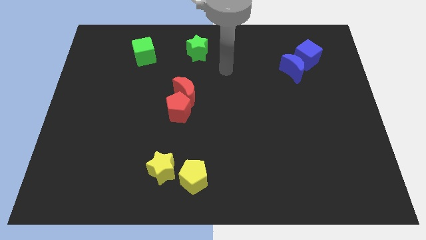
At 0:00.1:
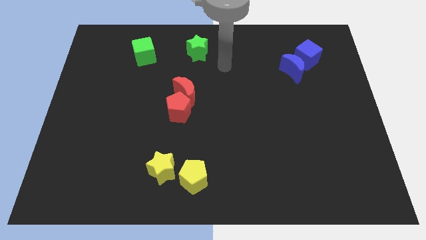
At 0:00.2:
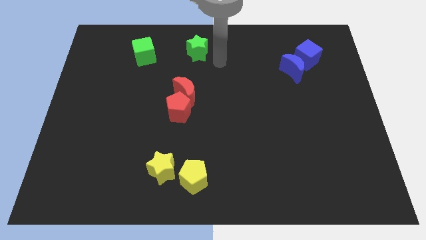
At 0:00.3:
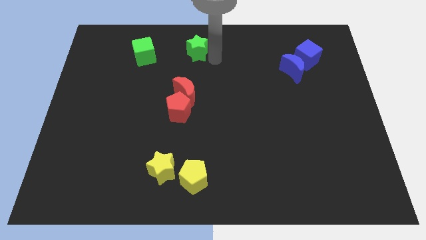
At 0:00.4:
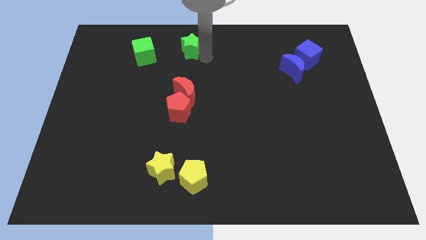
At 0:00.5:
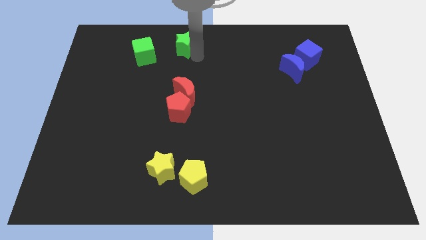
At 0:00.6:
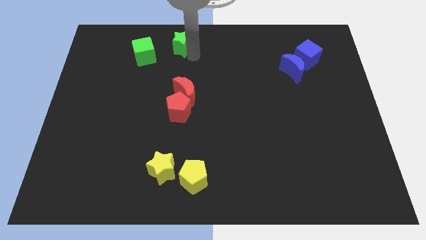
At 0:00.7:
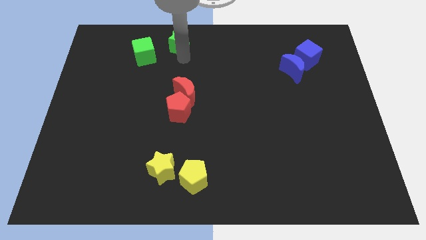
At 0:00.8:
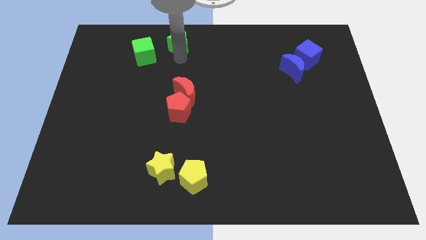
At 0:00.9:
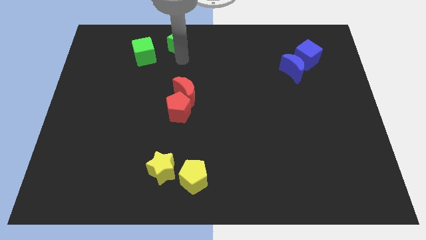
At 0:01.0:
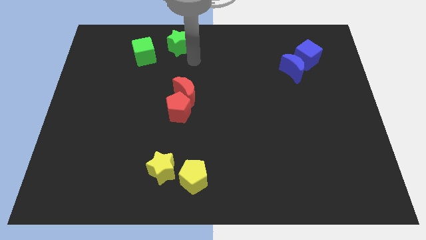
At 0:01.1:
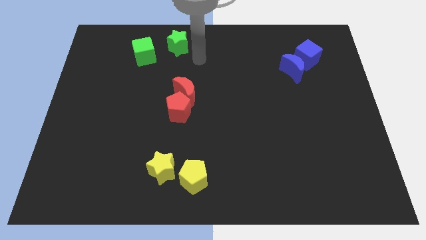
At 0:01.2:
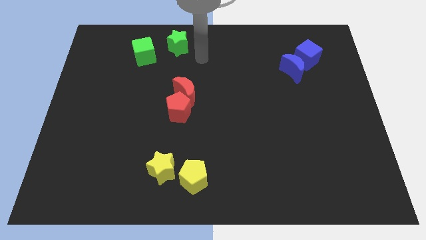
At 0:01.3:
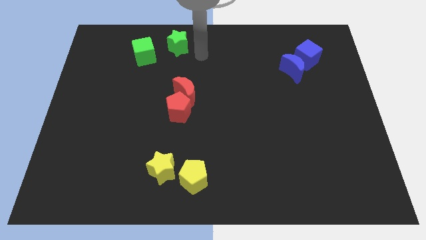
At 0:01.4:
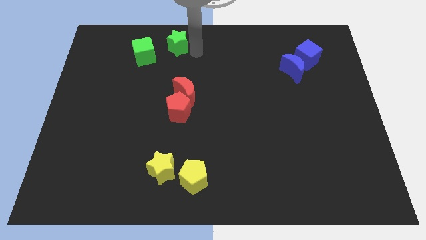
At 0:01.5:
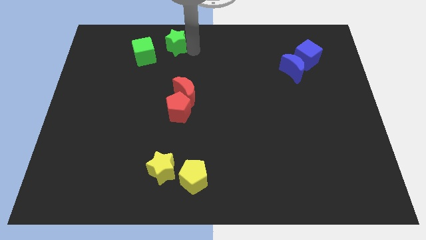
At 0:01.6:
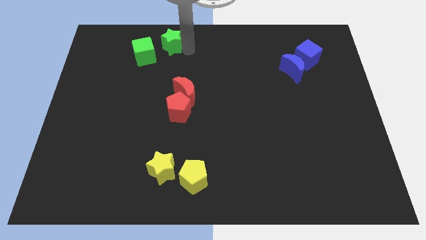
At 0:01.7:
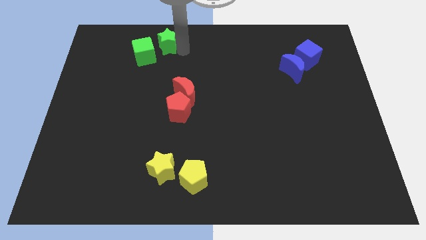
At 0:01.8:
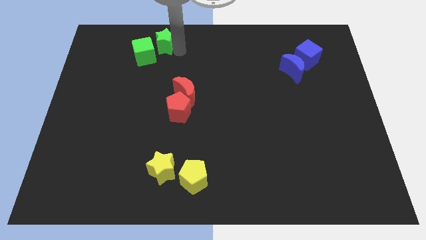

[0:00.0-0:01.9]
move the green star close to the green cube

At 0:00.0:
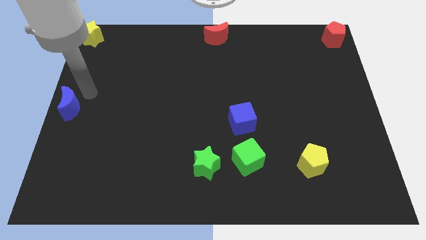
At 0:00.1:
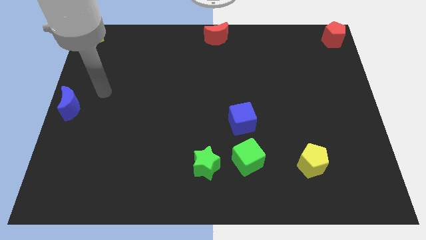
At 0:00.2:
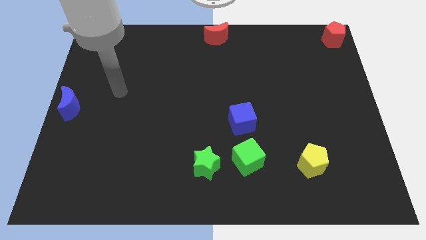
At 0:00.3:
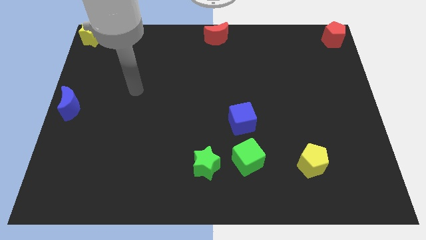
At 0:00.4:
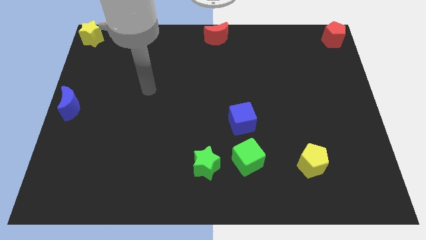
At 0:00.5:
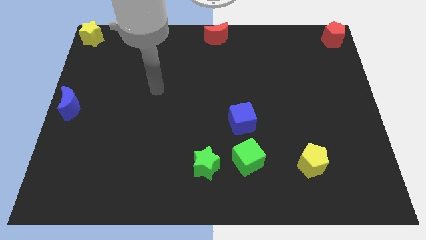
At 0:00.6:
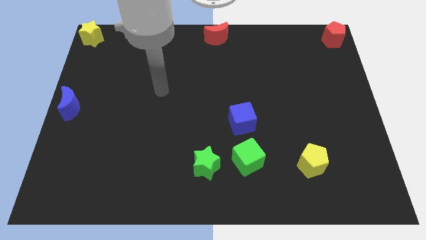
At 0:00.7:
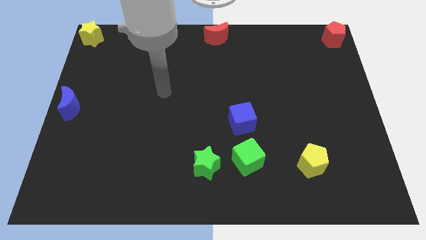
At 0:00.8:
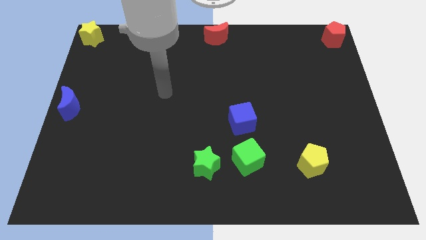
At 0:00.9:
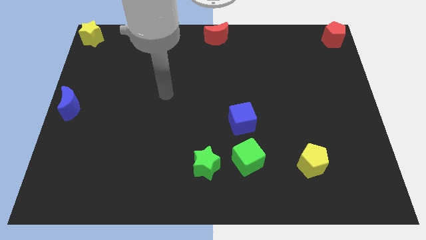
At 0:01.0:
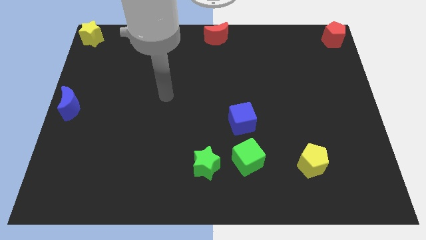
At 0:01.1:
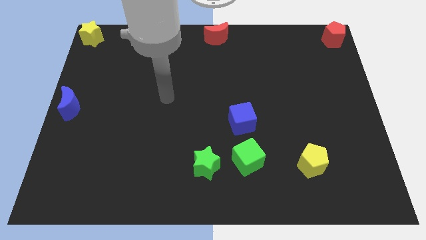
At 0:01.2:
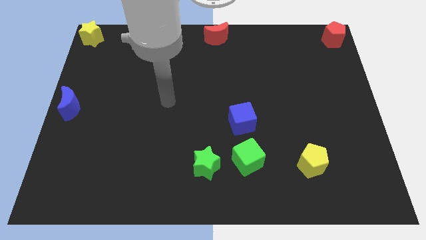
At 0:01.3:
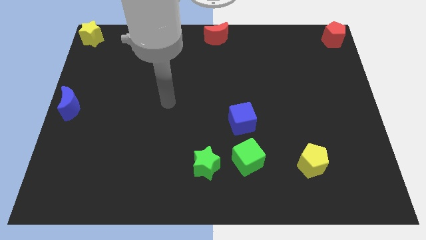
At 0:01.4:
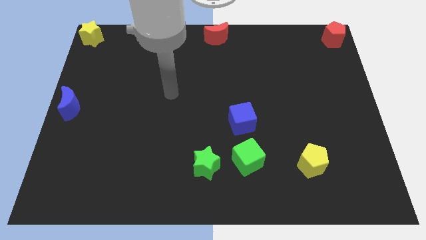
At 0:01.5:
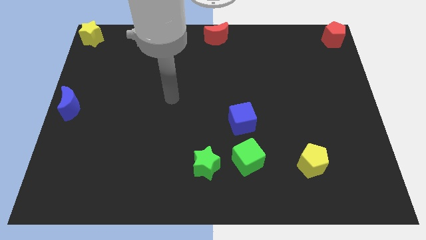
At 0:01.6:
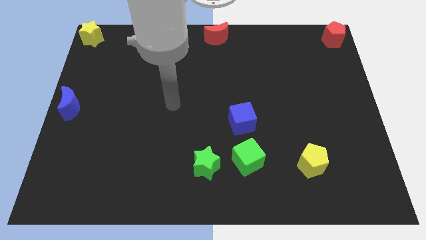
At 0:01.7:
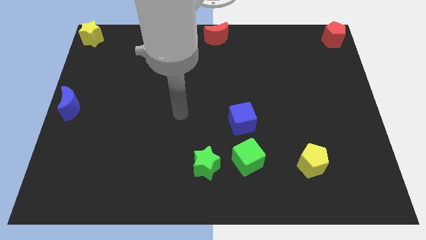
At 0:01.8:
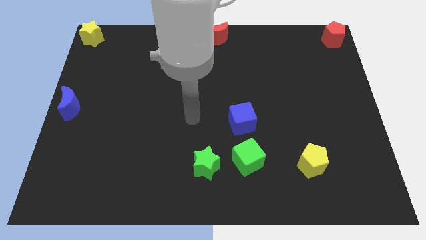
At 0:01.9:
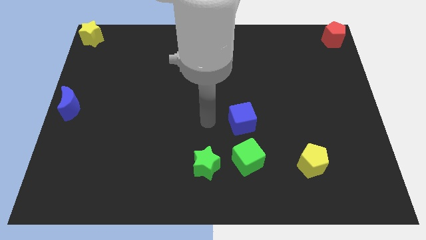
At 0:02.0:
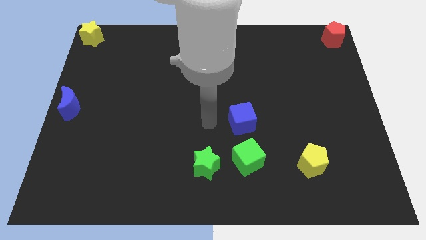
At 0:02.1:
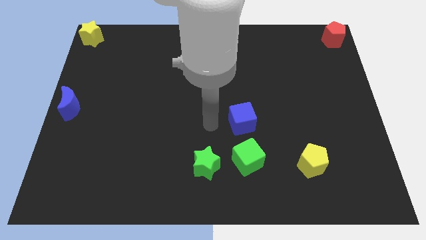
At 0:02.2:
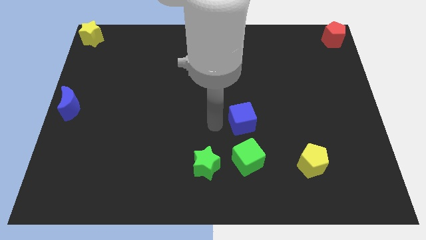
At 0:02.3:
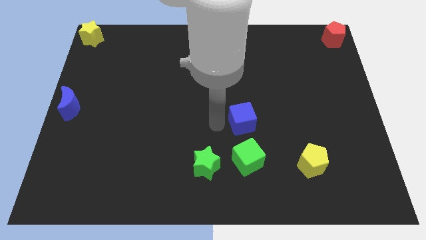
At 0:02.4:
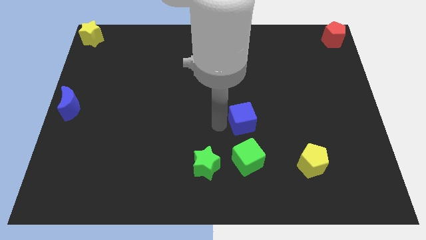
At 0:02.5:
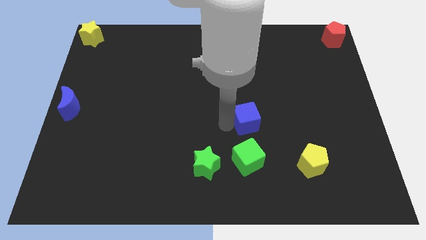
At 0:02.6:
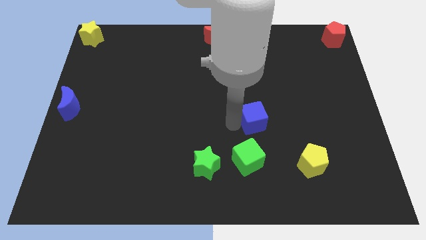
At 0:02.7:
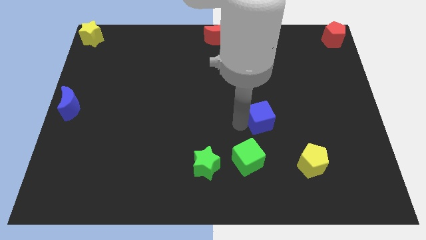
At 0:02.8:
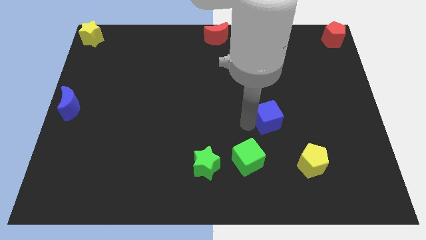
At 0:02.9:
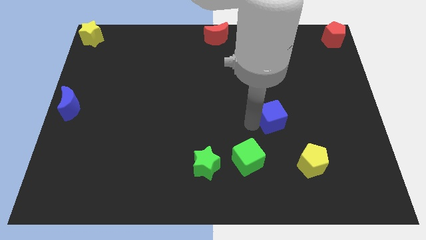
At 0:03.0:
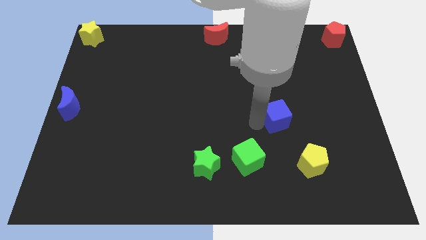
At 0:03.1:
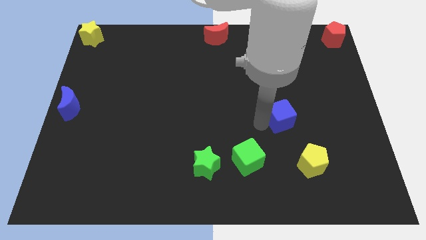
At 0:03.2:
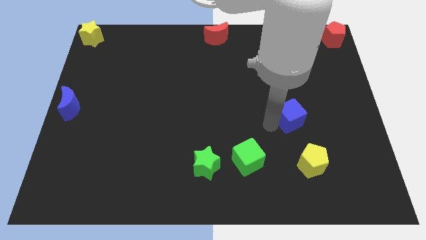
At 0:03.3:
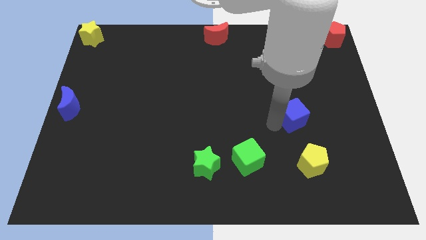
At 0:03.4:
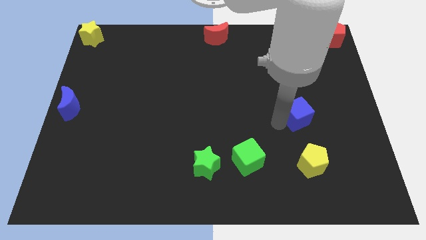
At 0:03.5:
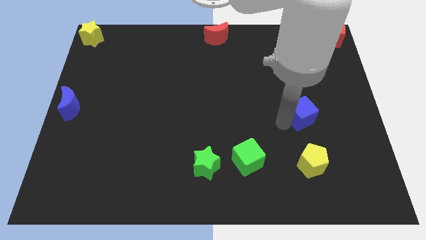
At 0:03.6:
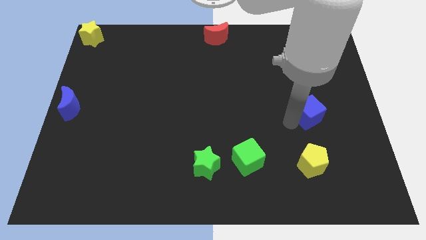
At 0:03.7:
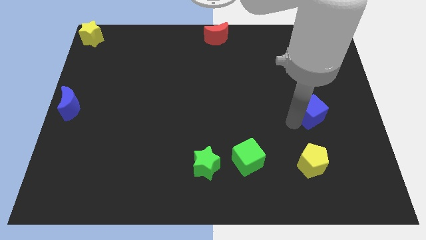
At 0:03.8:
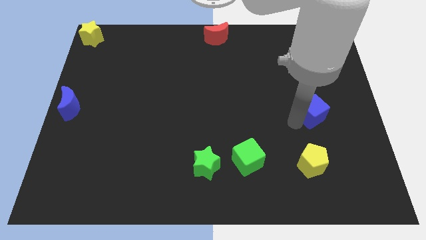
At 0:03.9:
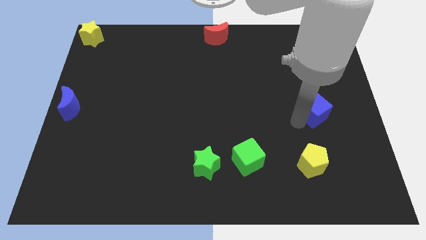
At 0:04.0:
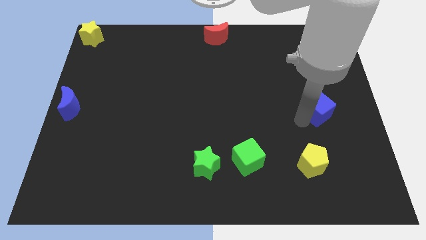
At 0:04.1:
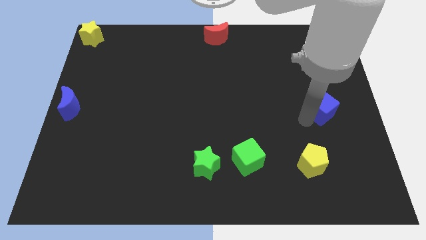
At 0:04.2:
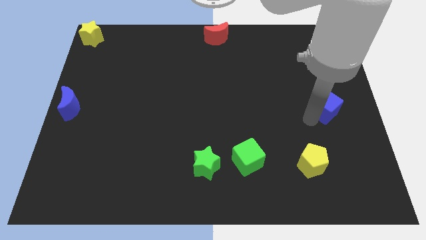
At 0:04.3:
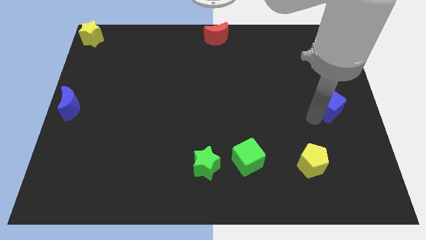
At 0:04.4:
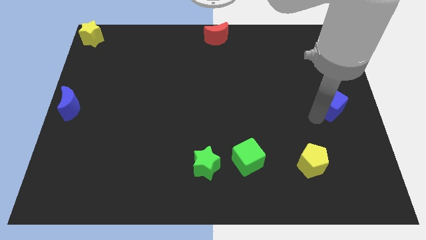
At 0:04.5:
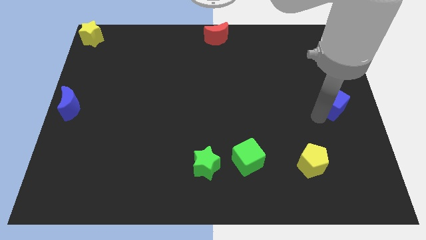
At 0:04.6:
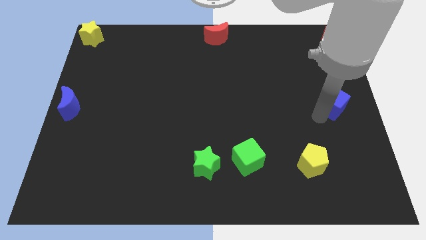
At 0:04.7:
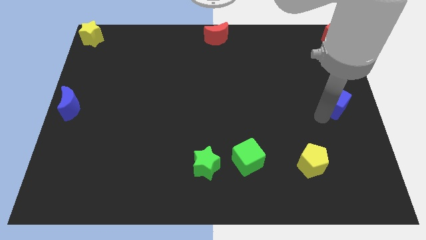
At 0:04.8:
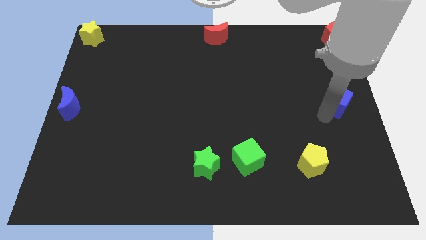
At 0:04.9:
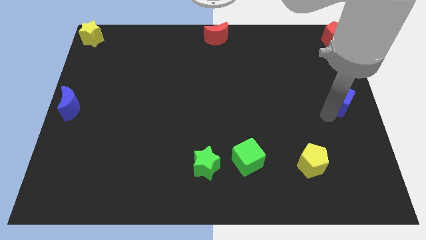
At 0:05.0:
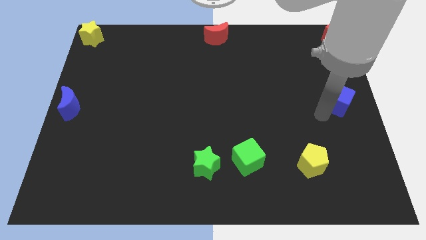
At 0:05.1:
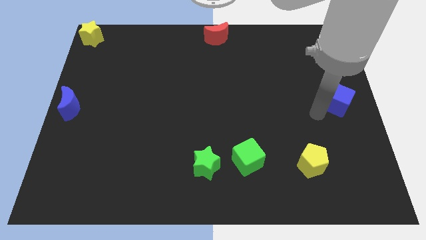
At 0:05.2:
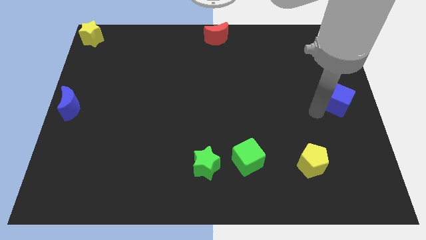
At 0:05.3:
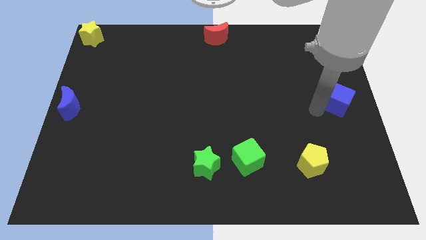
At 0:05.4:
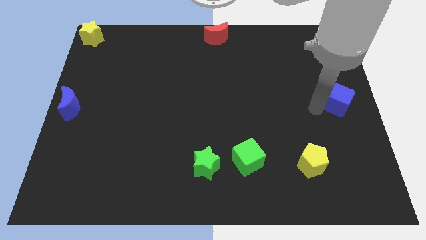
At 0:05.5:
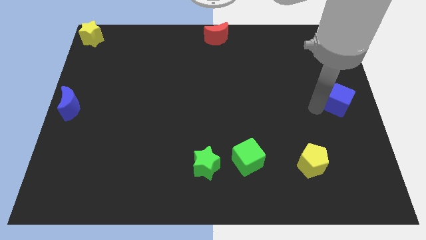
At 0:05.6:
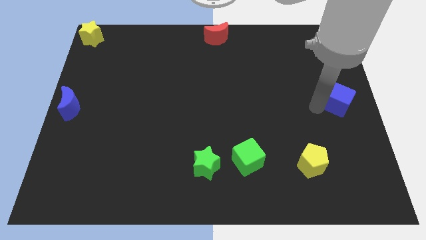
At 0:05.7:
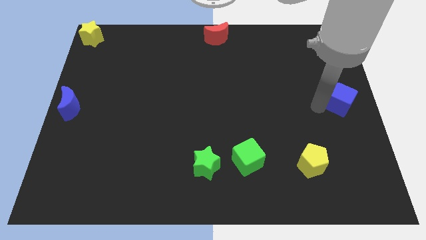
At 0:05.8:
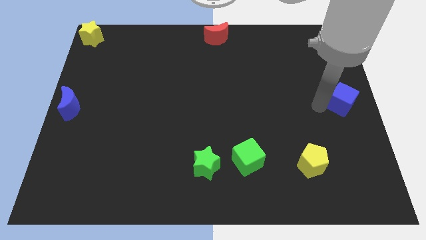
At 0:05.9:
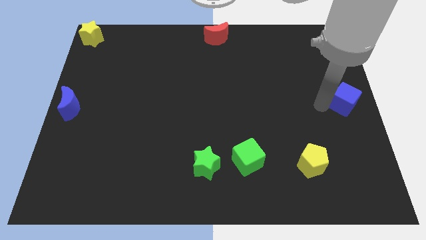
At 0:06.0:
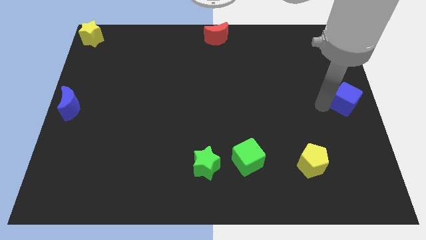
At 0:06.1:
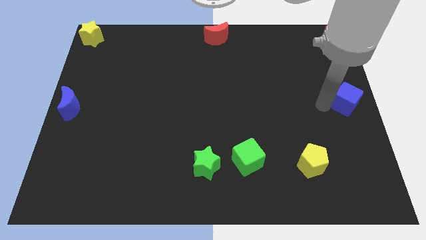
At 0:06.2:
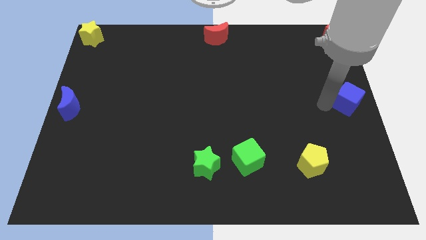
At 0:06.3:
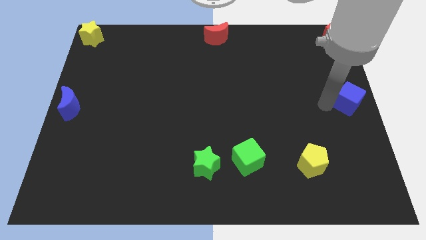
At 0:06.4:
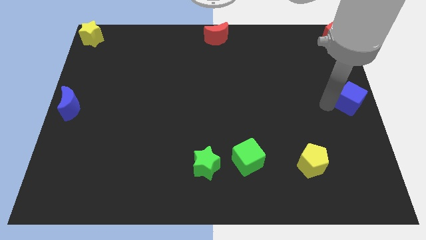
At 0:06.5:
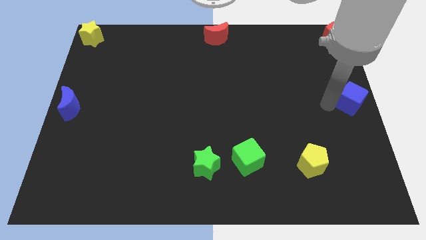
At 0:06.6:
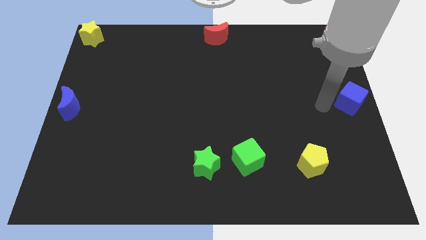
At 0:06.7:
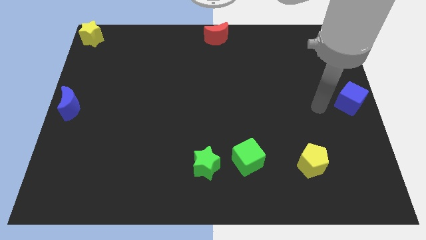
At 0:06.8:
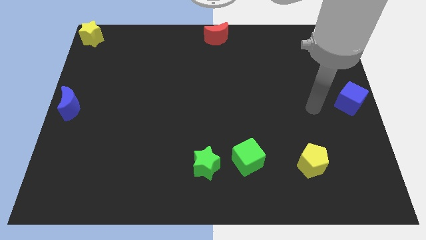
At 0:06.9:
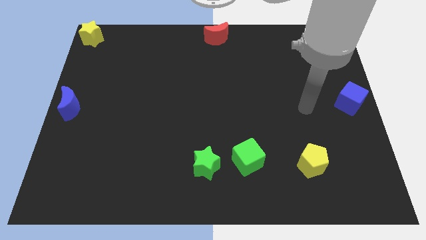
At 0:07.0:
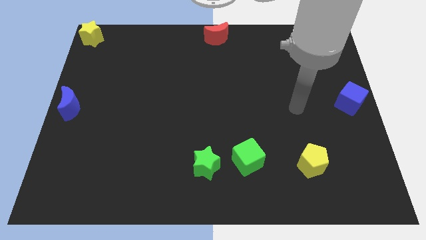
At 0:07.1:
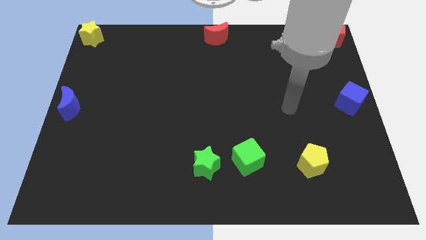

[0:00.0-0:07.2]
push the blue cube right center of the board
